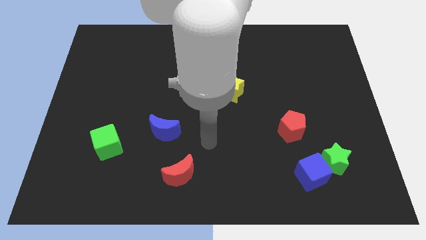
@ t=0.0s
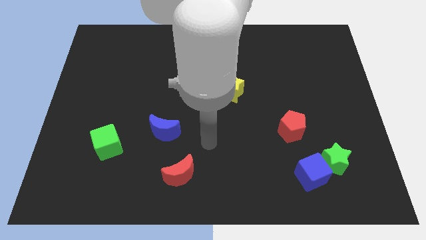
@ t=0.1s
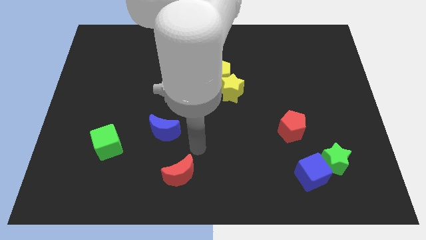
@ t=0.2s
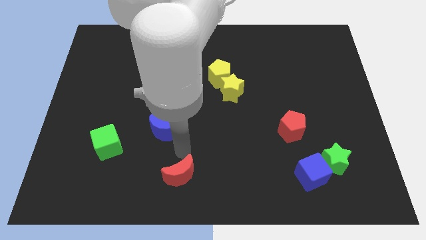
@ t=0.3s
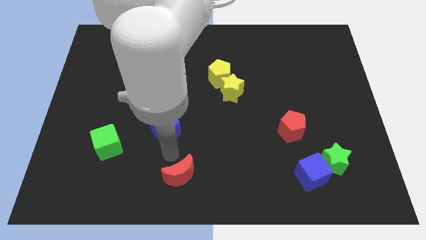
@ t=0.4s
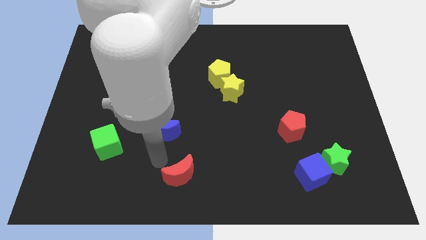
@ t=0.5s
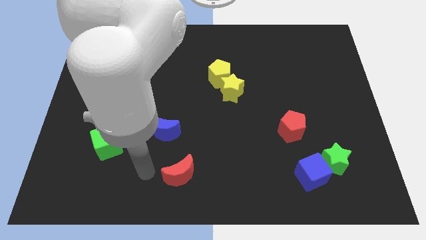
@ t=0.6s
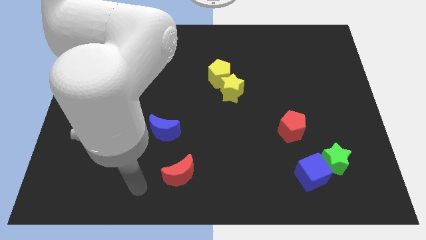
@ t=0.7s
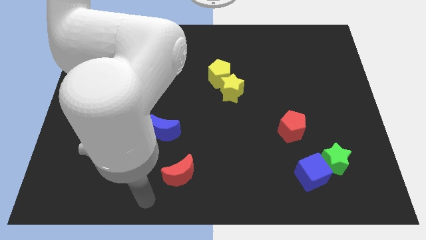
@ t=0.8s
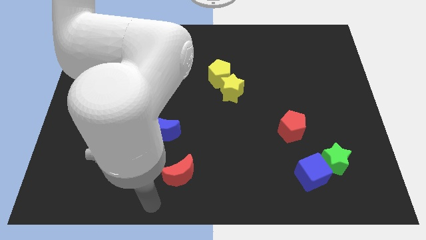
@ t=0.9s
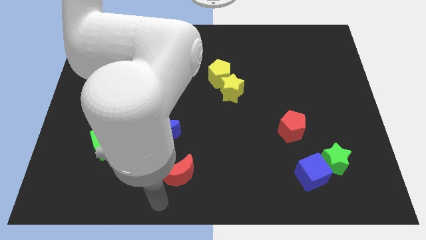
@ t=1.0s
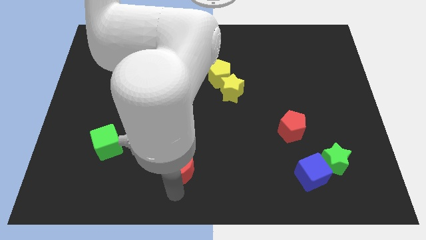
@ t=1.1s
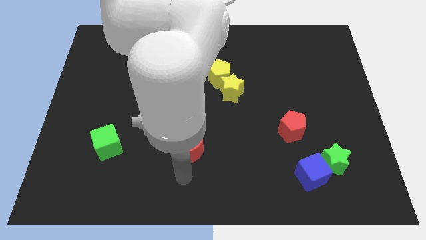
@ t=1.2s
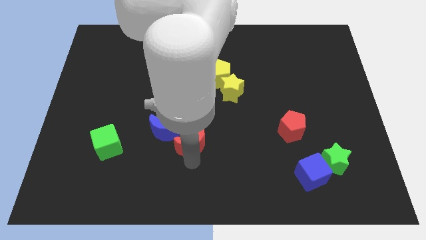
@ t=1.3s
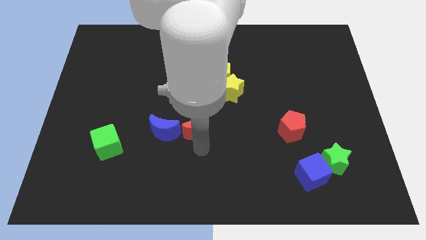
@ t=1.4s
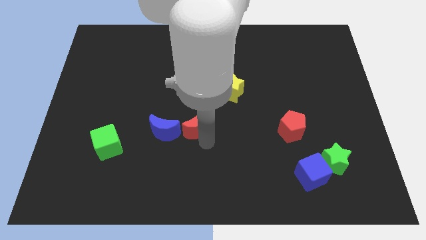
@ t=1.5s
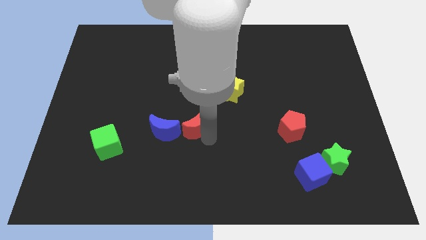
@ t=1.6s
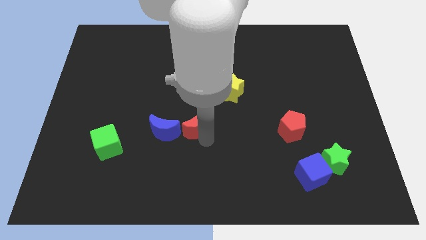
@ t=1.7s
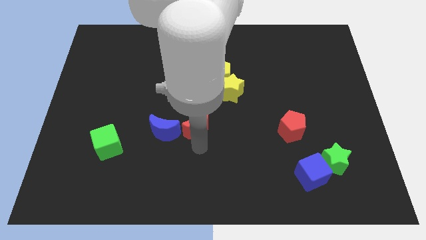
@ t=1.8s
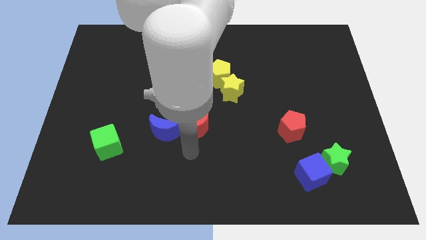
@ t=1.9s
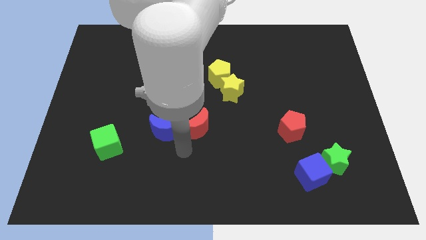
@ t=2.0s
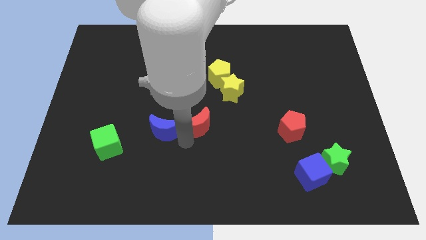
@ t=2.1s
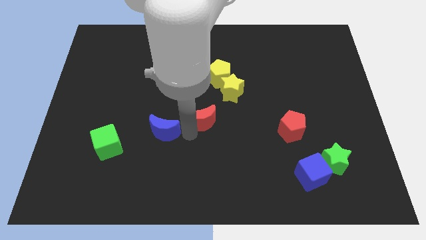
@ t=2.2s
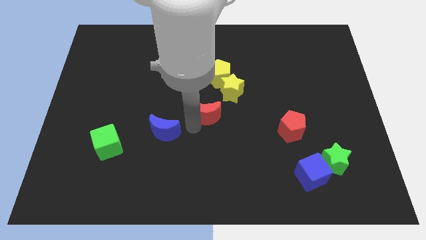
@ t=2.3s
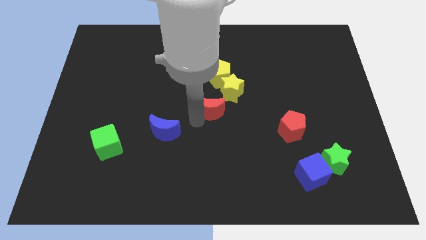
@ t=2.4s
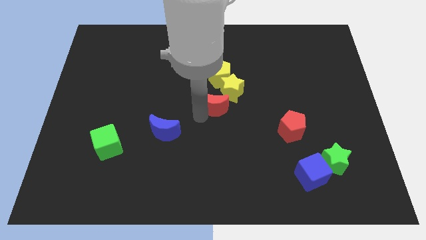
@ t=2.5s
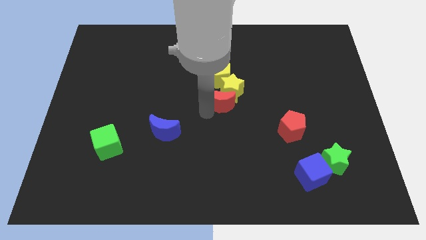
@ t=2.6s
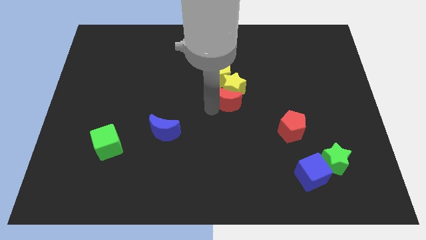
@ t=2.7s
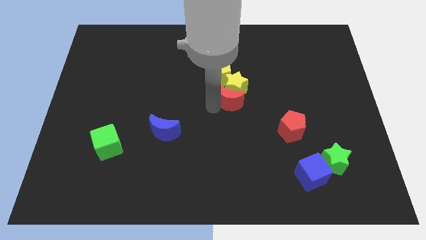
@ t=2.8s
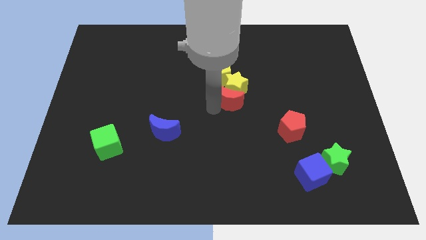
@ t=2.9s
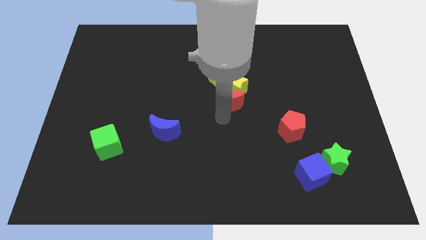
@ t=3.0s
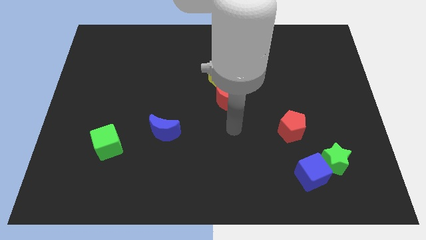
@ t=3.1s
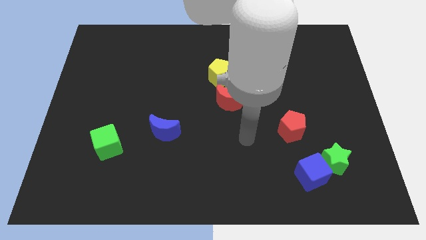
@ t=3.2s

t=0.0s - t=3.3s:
move the red moon below the yellow star

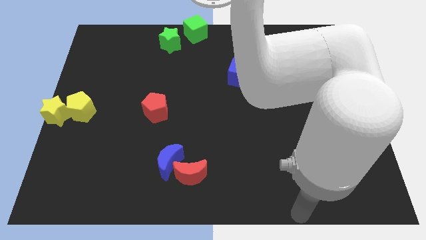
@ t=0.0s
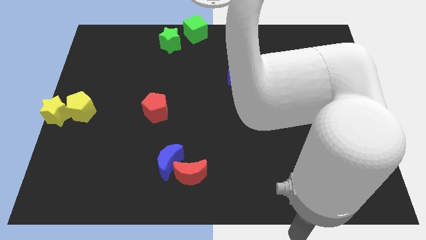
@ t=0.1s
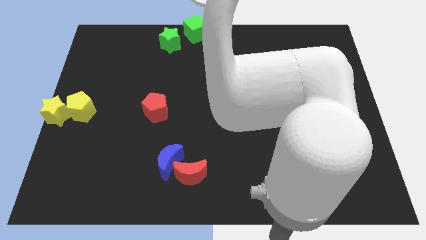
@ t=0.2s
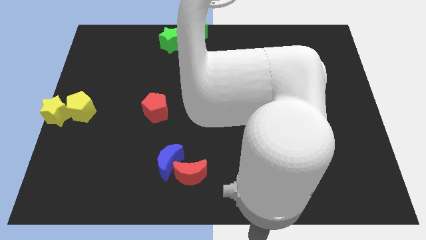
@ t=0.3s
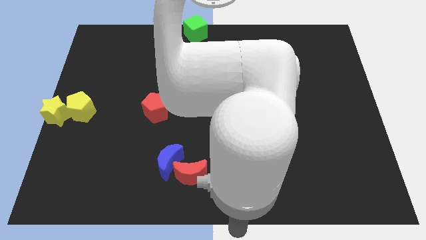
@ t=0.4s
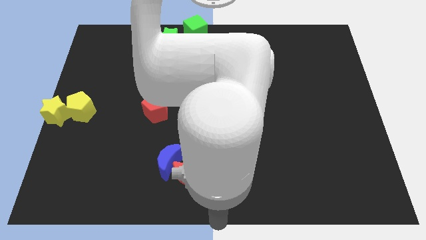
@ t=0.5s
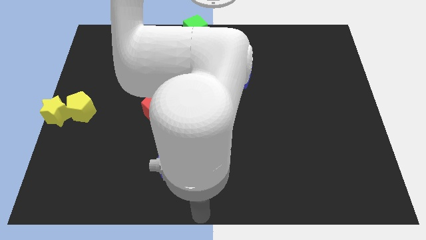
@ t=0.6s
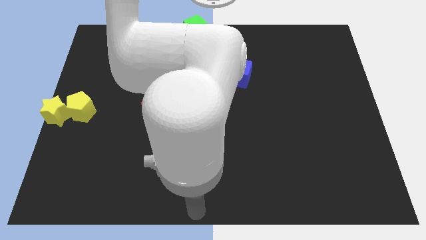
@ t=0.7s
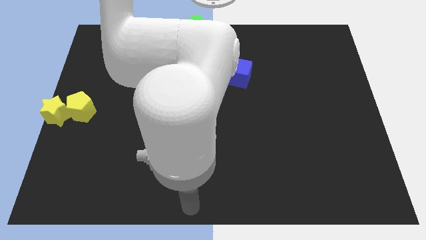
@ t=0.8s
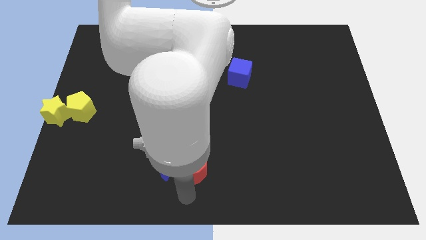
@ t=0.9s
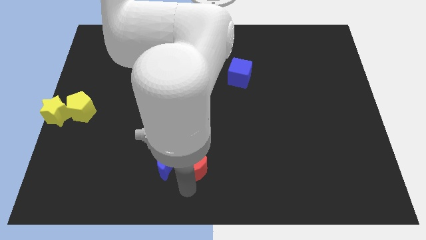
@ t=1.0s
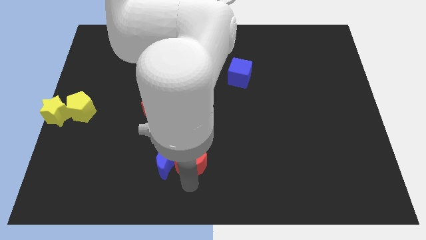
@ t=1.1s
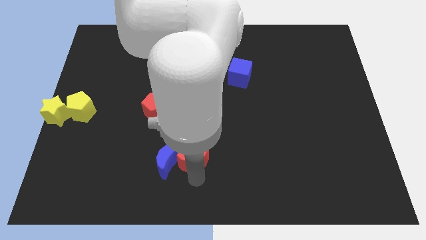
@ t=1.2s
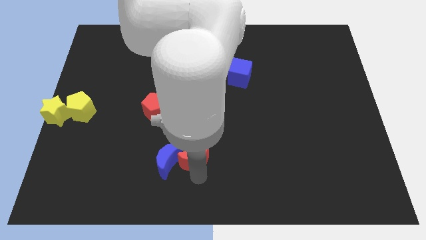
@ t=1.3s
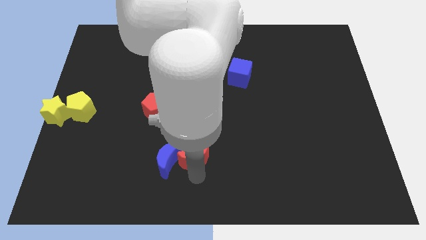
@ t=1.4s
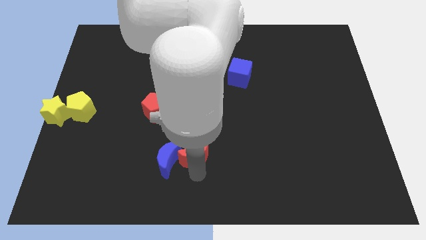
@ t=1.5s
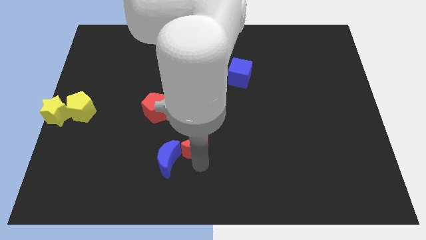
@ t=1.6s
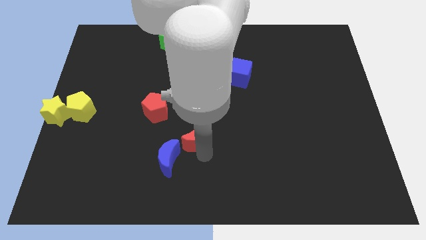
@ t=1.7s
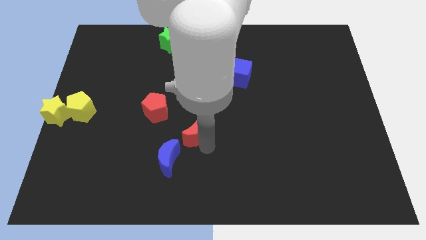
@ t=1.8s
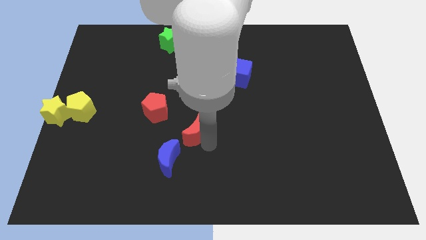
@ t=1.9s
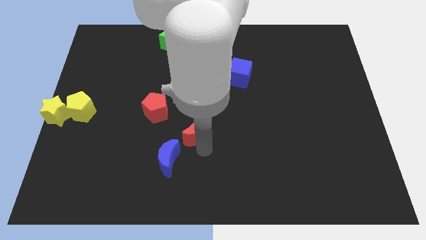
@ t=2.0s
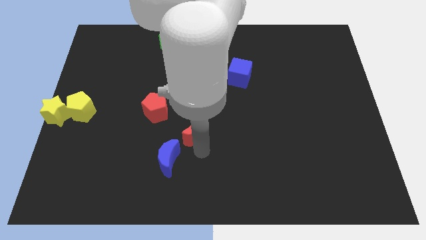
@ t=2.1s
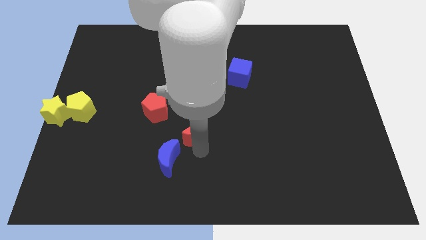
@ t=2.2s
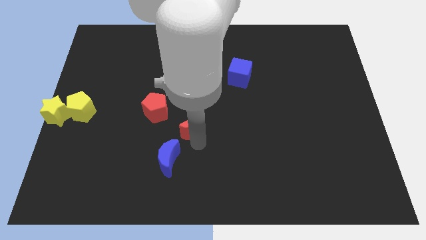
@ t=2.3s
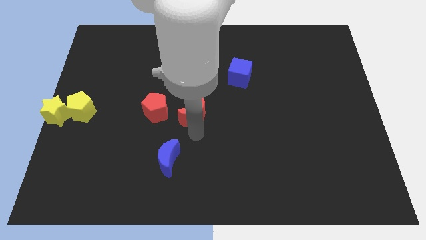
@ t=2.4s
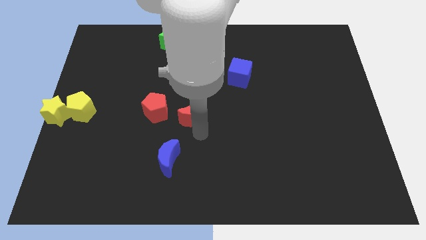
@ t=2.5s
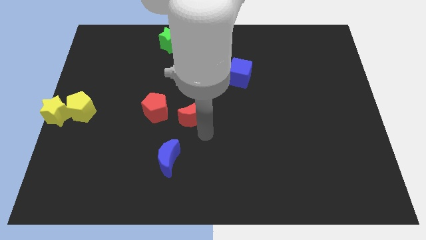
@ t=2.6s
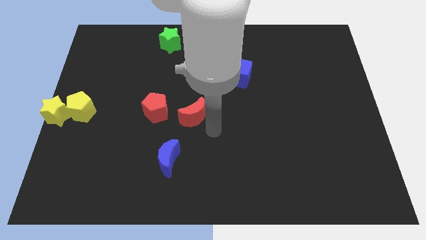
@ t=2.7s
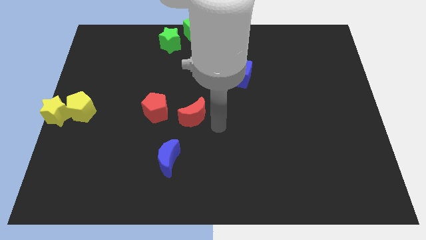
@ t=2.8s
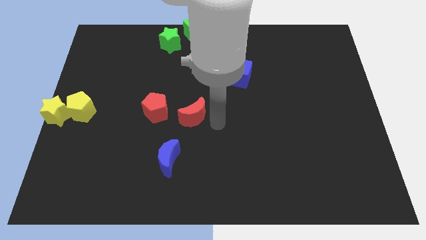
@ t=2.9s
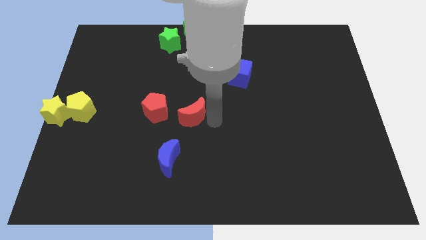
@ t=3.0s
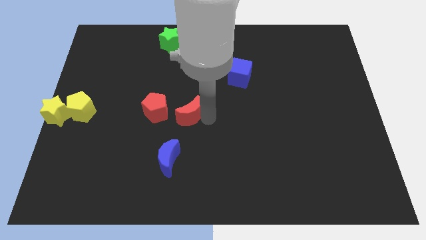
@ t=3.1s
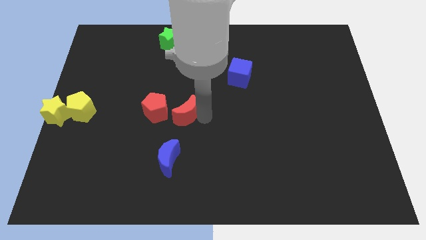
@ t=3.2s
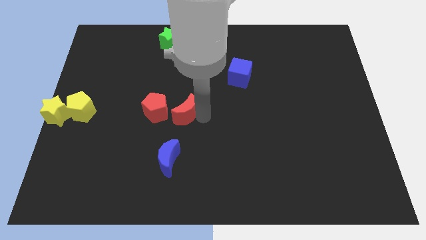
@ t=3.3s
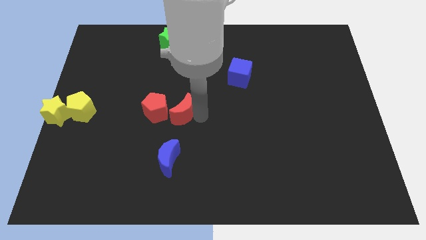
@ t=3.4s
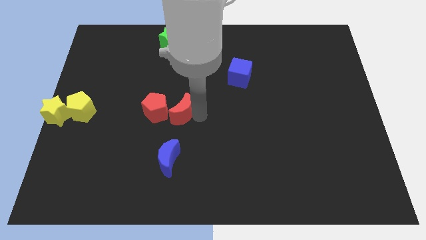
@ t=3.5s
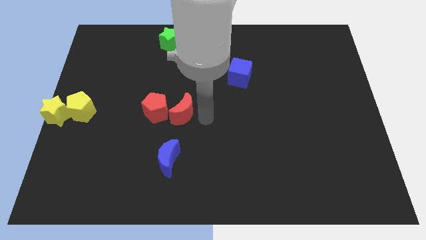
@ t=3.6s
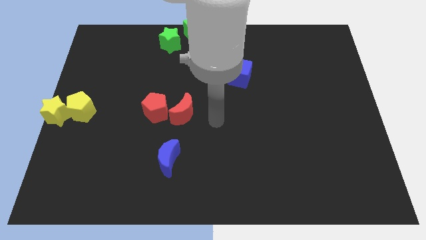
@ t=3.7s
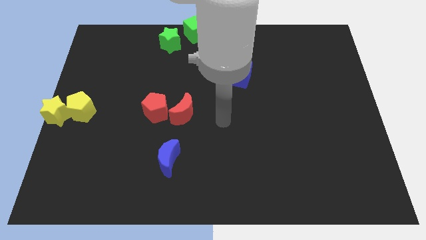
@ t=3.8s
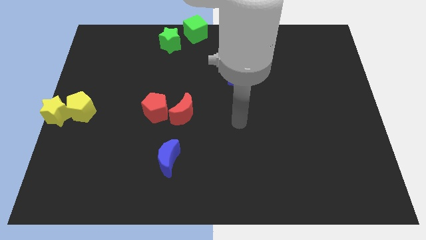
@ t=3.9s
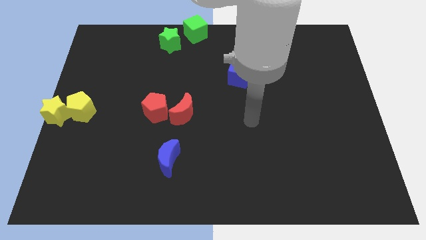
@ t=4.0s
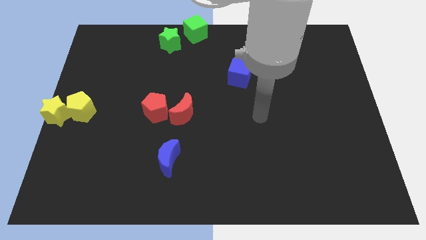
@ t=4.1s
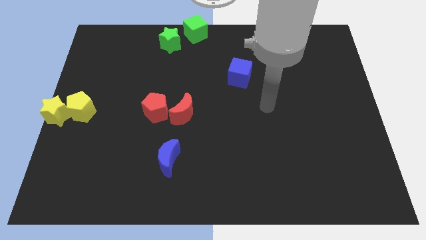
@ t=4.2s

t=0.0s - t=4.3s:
push the red crescent towards the right side of the red pentagon

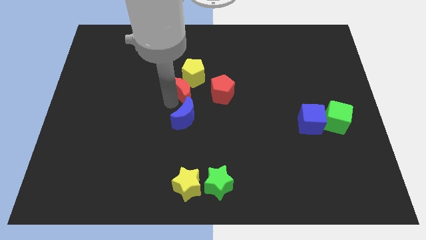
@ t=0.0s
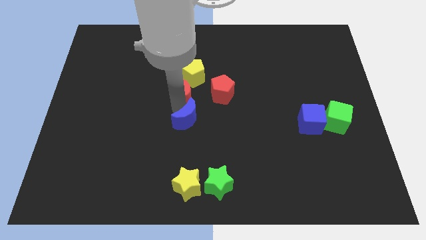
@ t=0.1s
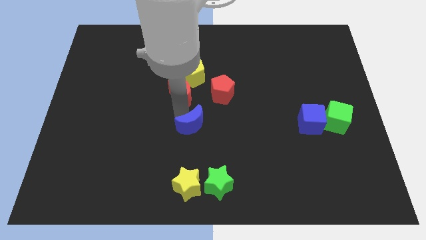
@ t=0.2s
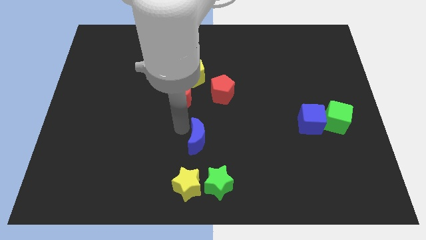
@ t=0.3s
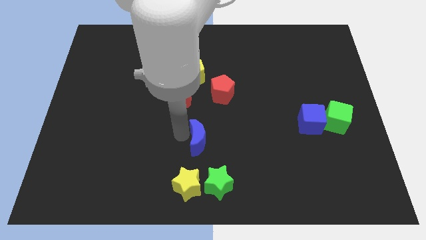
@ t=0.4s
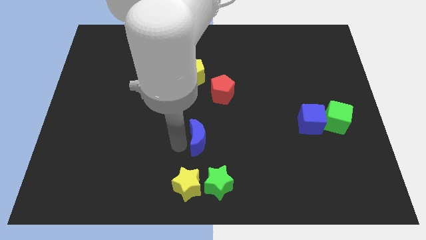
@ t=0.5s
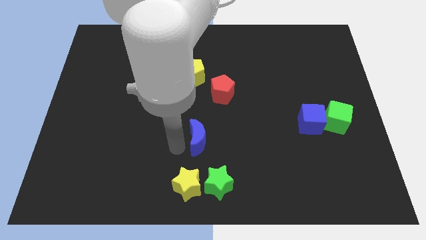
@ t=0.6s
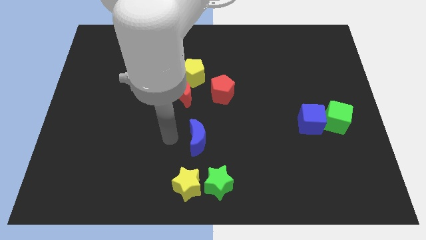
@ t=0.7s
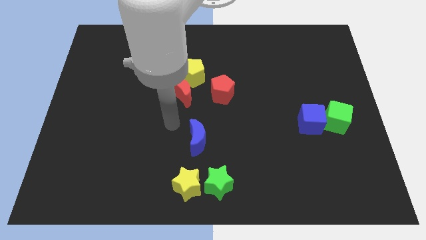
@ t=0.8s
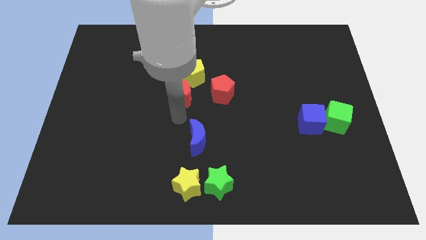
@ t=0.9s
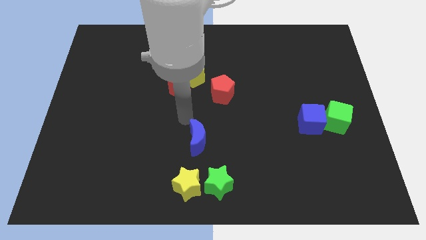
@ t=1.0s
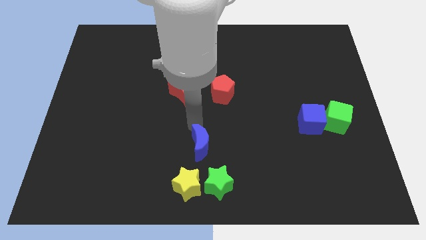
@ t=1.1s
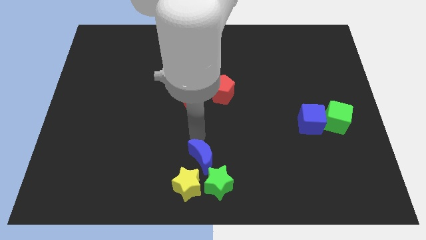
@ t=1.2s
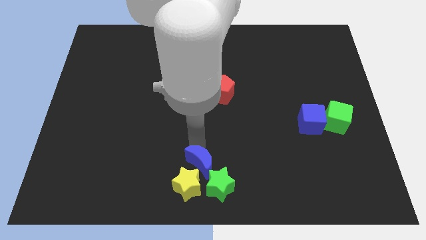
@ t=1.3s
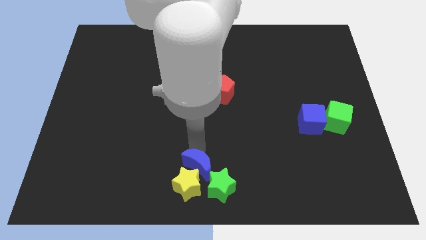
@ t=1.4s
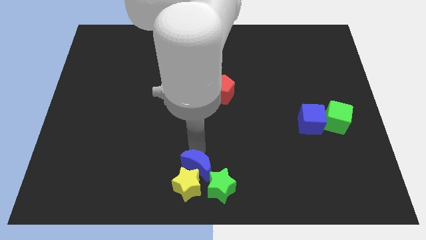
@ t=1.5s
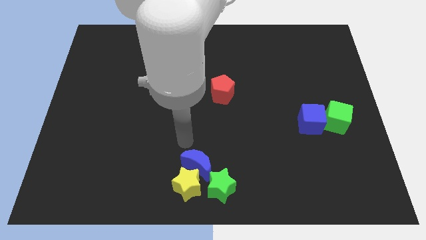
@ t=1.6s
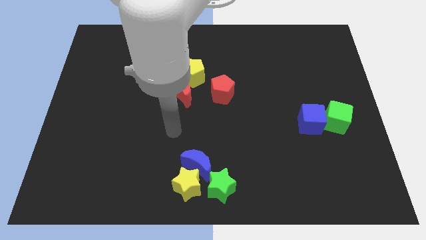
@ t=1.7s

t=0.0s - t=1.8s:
push the blue moon into the green star
